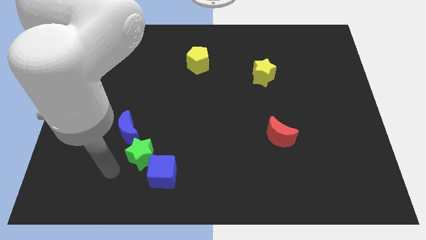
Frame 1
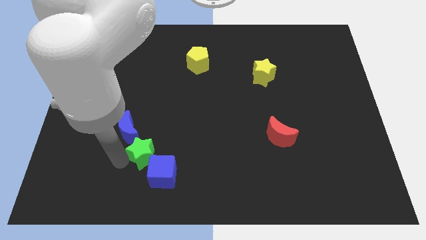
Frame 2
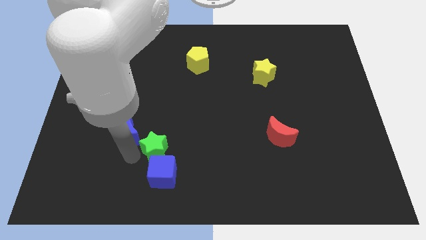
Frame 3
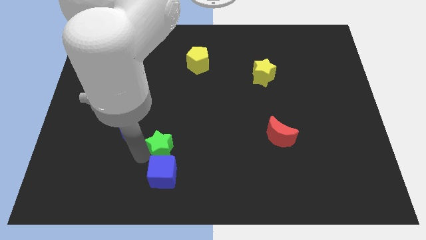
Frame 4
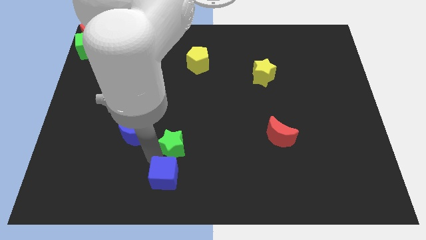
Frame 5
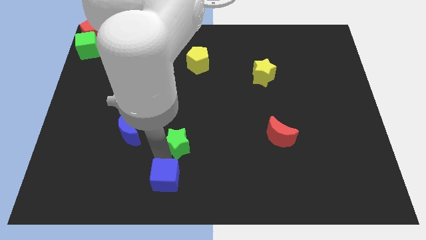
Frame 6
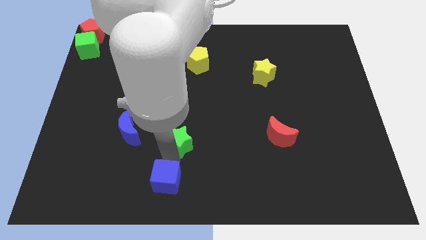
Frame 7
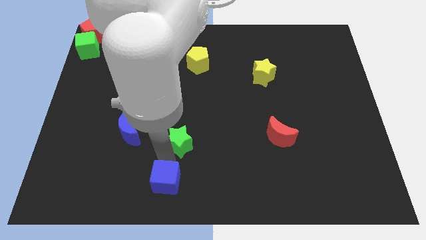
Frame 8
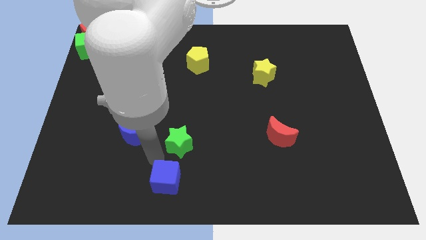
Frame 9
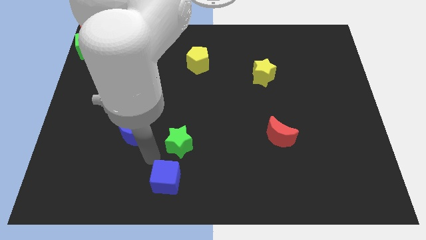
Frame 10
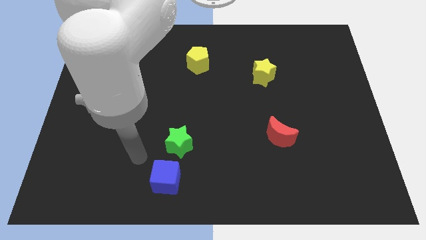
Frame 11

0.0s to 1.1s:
separate the green star from blue blocks

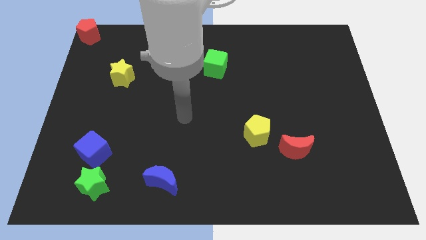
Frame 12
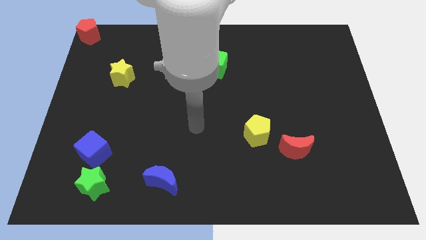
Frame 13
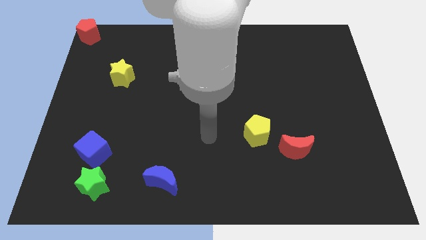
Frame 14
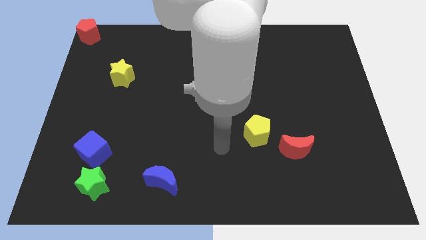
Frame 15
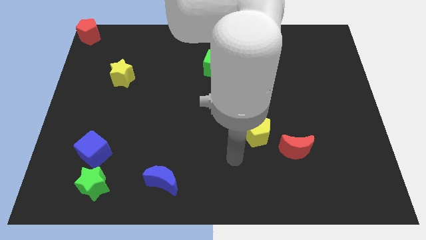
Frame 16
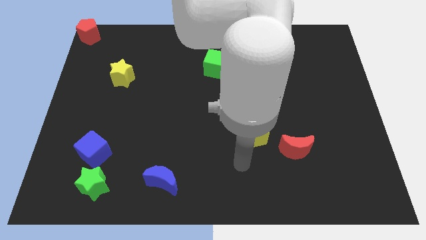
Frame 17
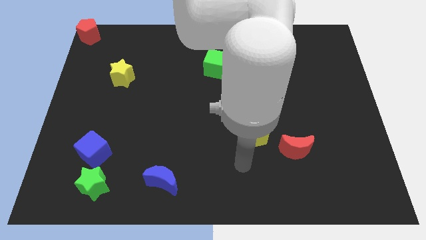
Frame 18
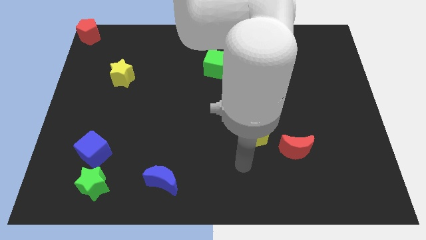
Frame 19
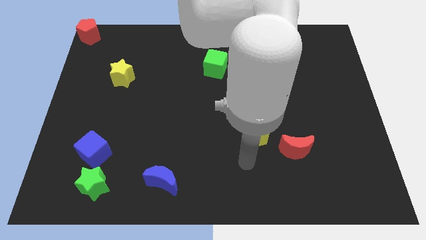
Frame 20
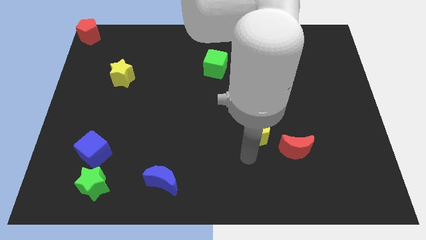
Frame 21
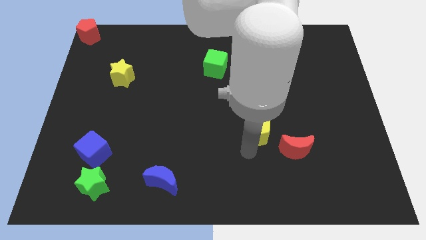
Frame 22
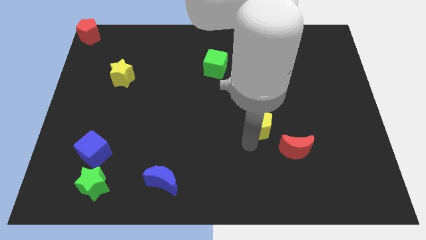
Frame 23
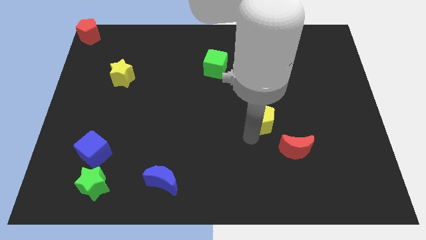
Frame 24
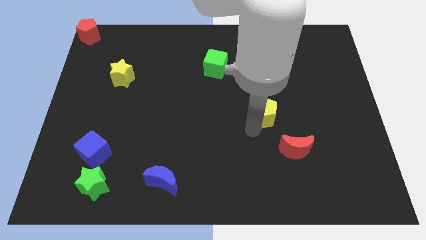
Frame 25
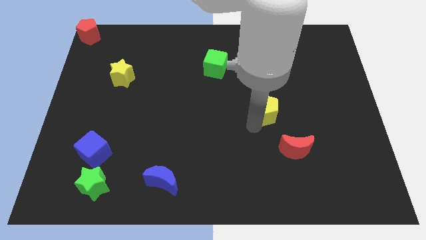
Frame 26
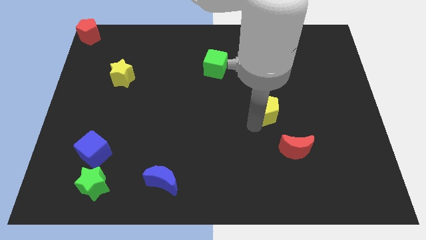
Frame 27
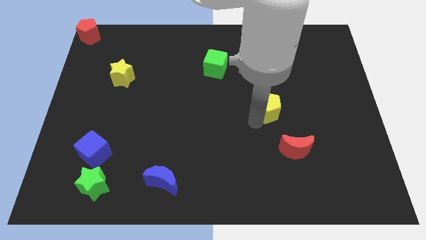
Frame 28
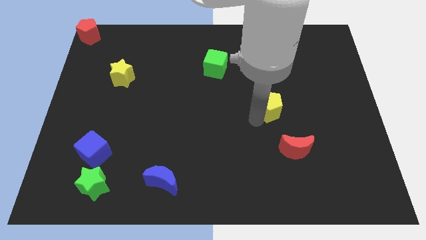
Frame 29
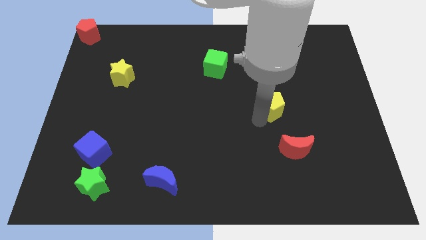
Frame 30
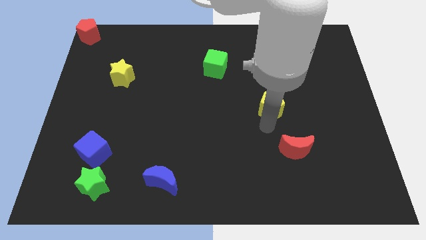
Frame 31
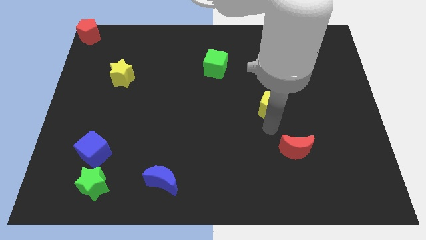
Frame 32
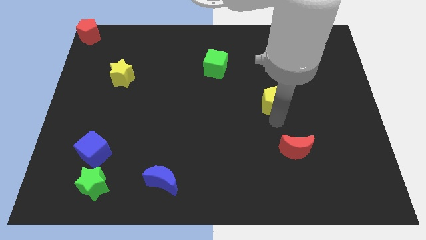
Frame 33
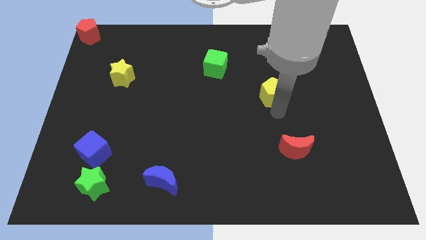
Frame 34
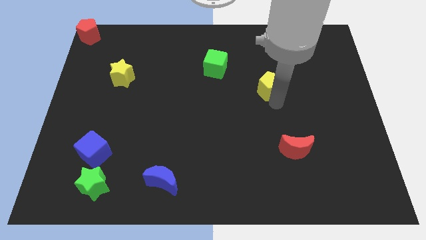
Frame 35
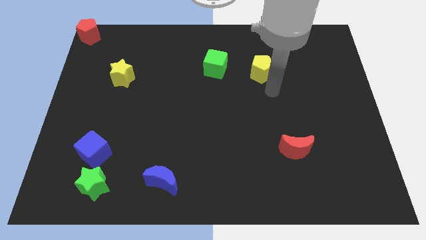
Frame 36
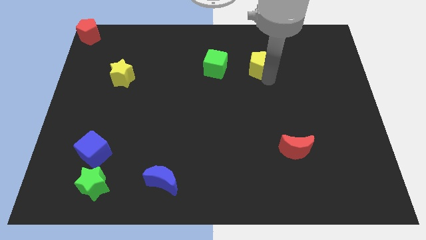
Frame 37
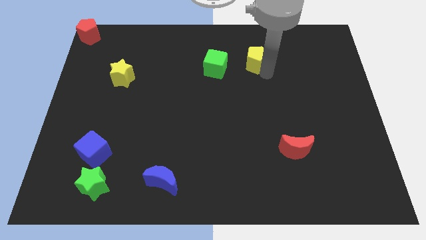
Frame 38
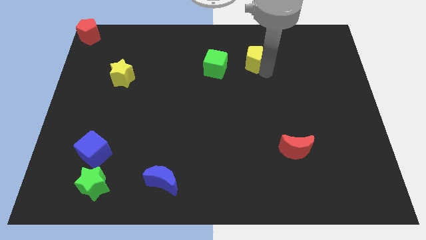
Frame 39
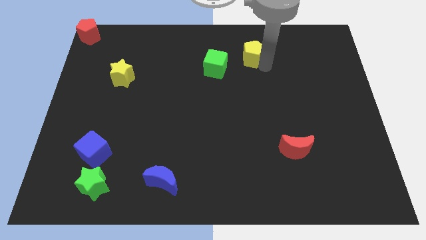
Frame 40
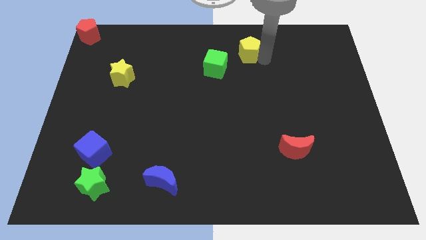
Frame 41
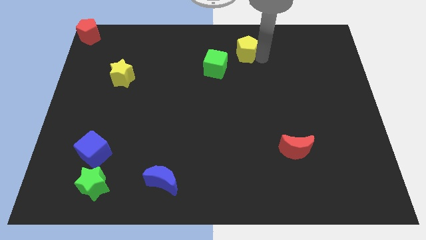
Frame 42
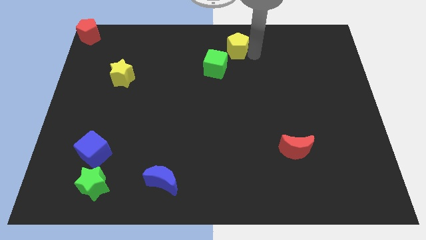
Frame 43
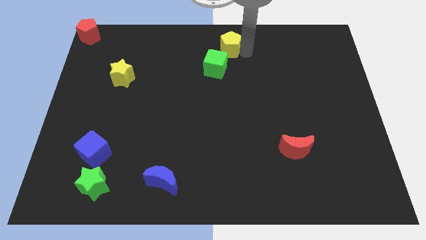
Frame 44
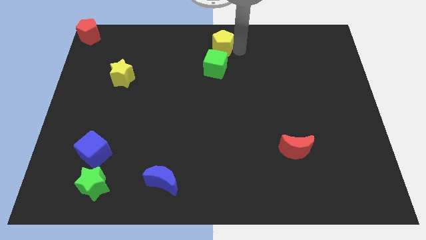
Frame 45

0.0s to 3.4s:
push the yellow pentagon to the top right side of the green cube

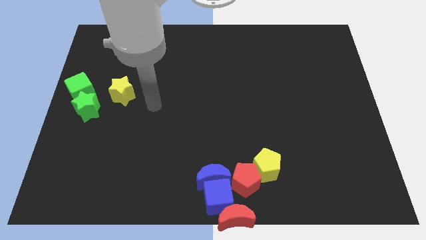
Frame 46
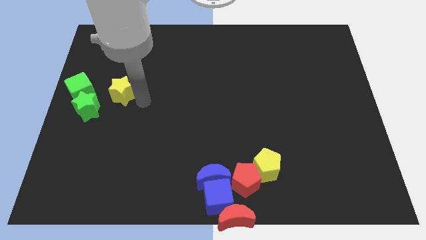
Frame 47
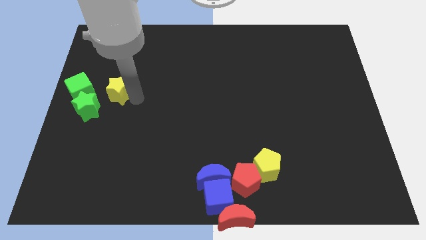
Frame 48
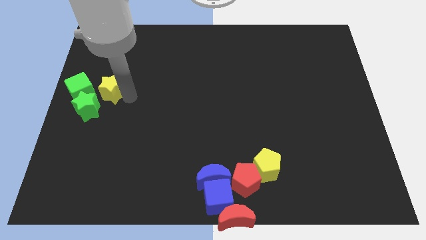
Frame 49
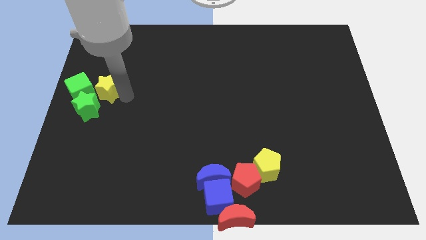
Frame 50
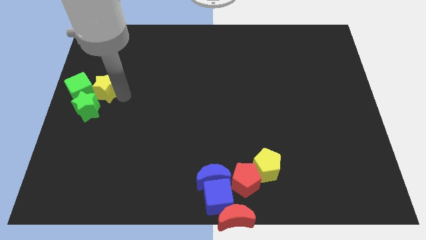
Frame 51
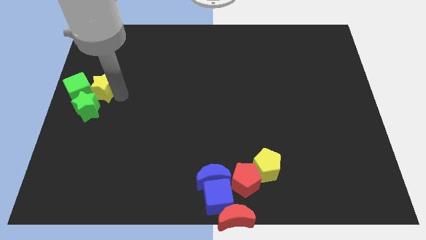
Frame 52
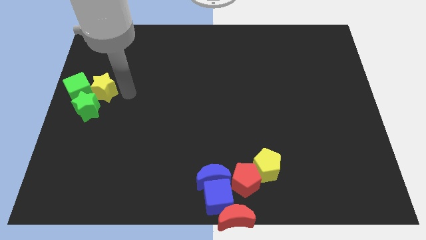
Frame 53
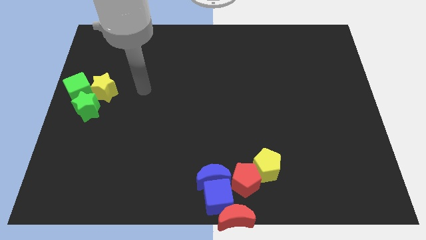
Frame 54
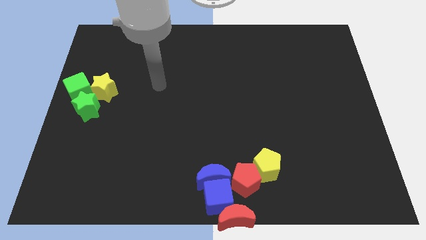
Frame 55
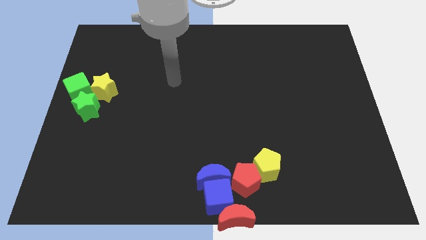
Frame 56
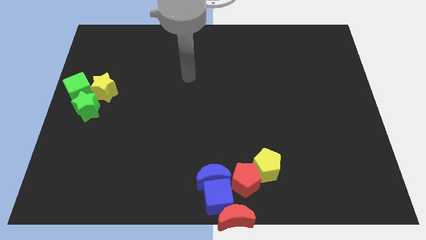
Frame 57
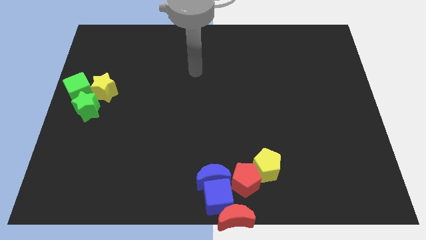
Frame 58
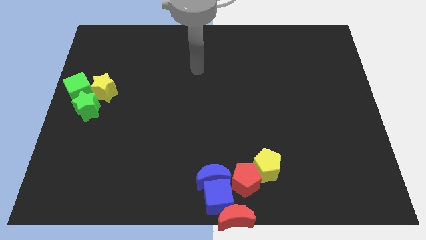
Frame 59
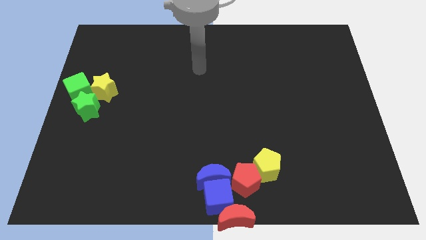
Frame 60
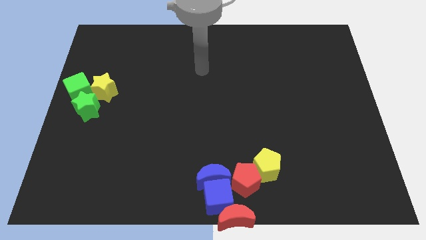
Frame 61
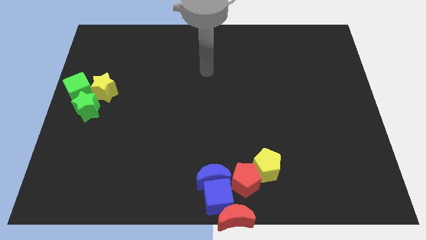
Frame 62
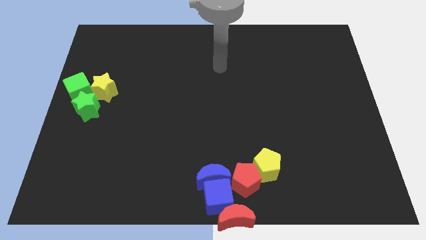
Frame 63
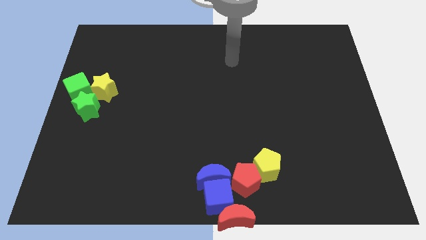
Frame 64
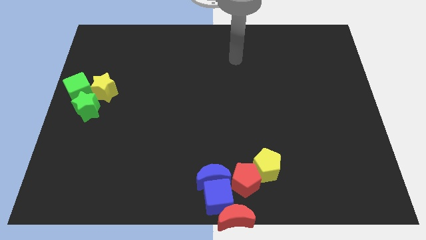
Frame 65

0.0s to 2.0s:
move the arm to the top center of the board

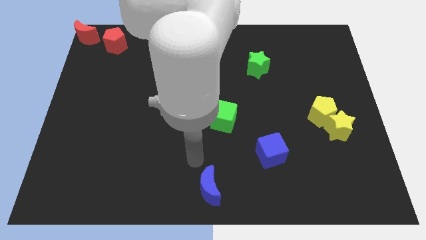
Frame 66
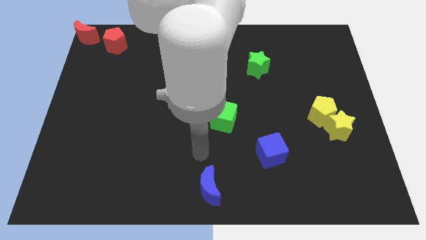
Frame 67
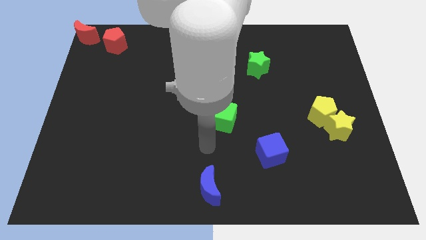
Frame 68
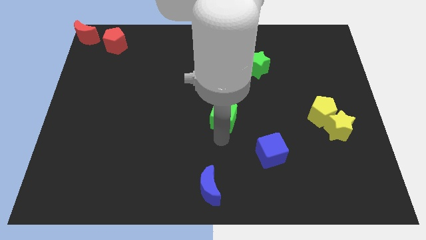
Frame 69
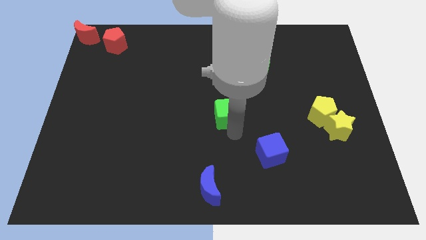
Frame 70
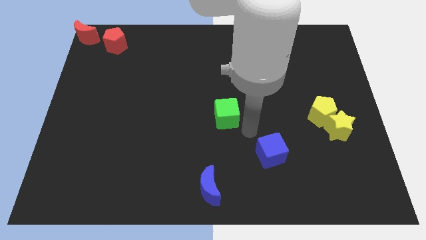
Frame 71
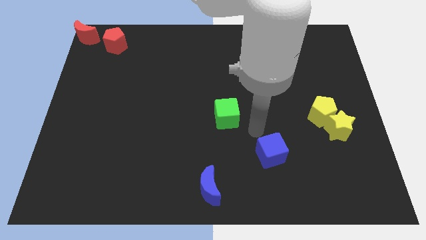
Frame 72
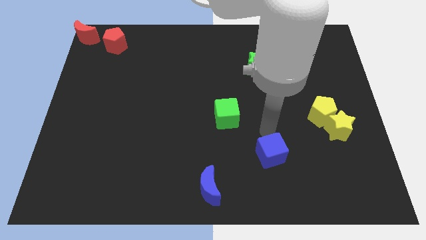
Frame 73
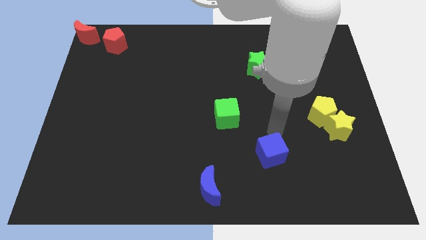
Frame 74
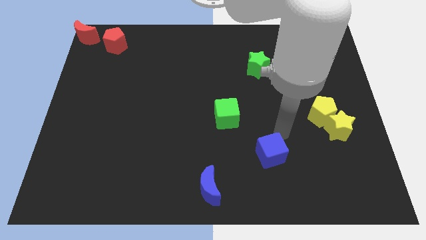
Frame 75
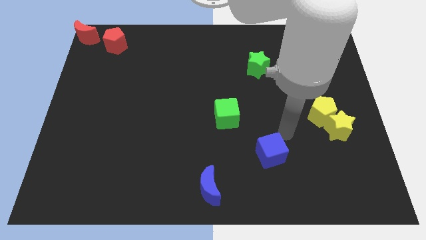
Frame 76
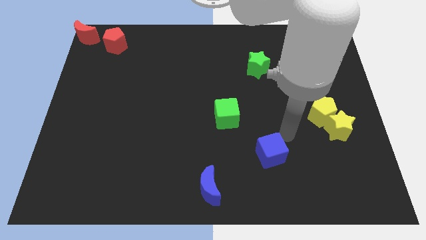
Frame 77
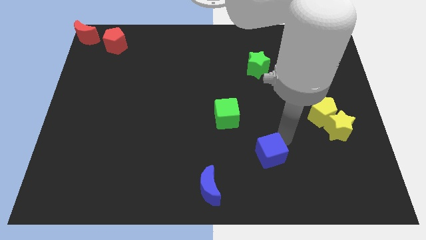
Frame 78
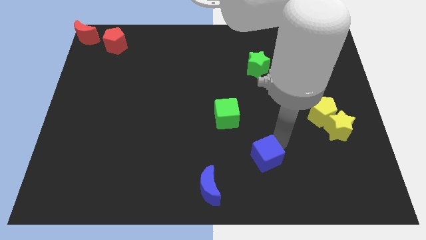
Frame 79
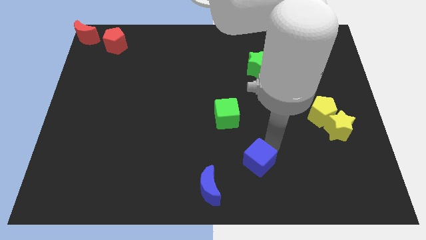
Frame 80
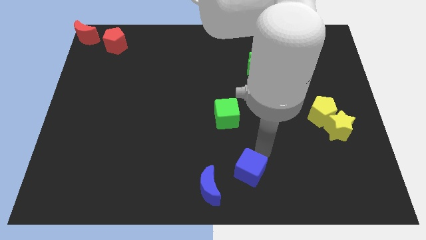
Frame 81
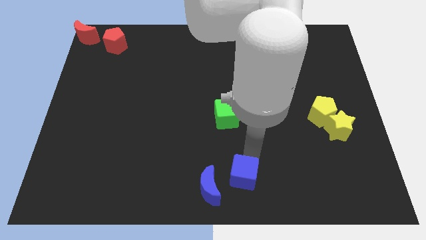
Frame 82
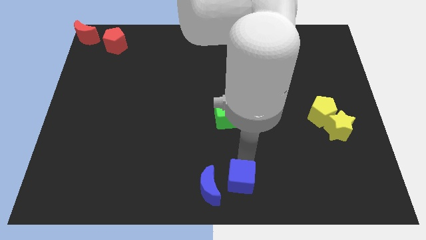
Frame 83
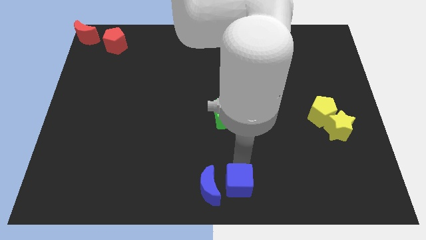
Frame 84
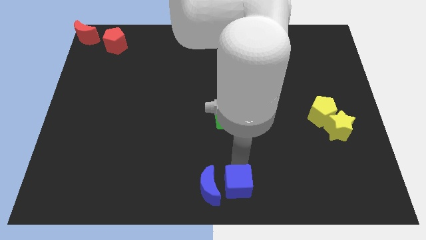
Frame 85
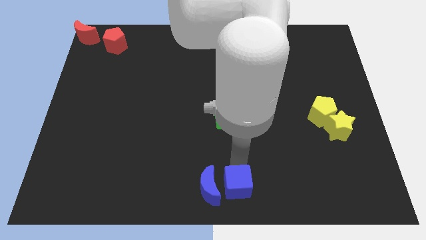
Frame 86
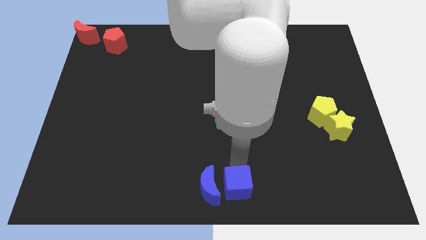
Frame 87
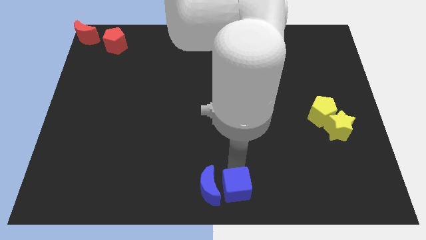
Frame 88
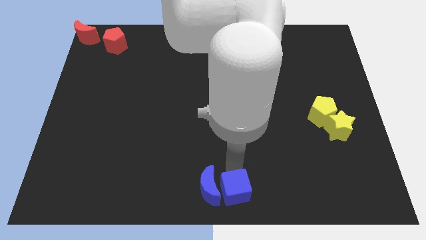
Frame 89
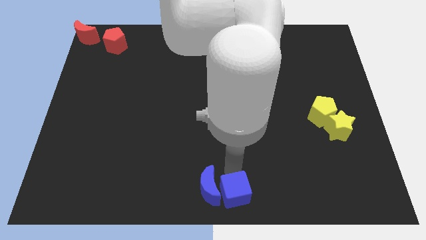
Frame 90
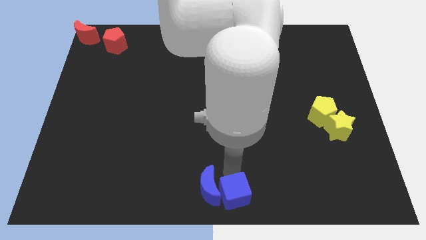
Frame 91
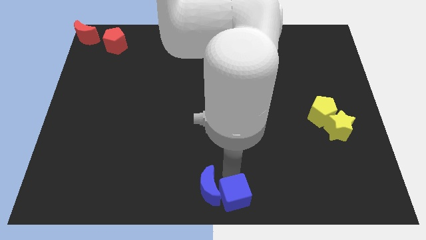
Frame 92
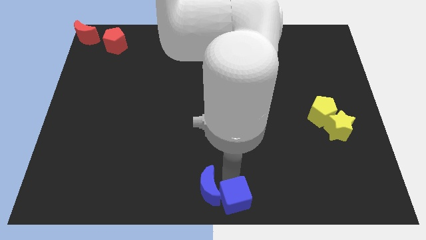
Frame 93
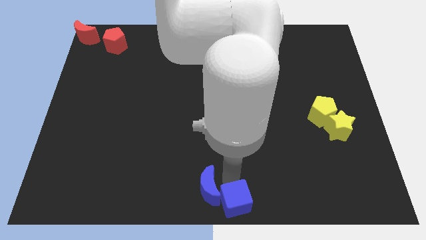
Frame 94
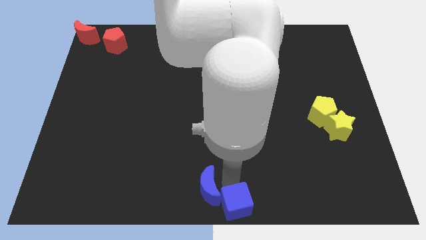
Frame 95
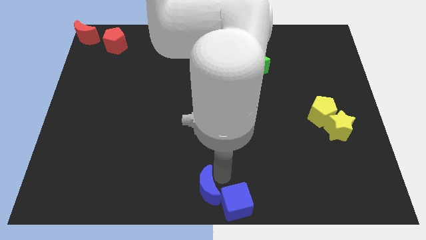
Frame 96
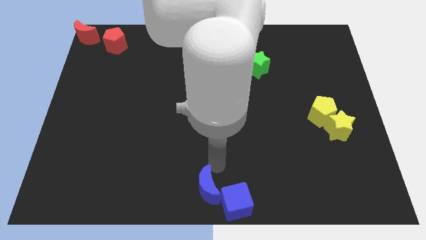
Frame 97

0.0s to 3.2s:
move the blue cube to the right of the blue crescent
